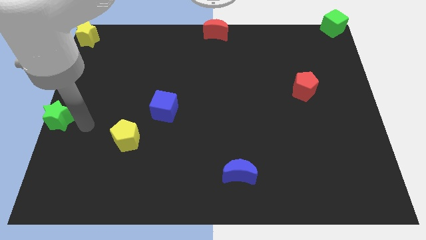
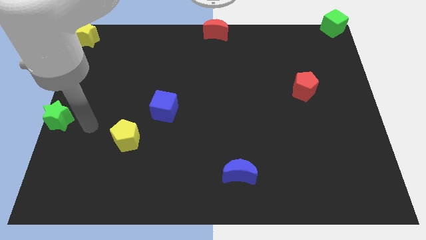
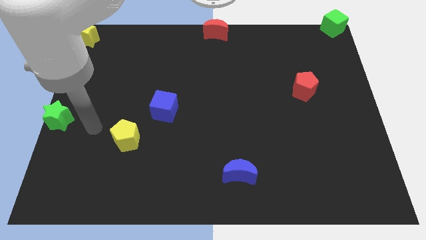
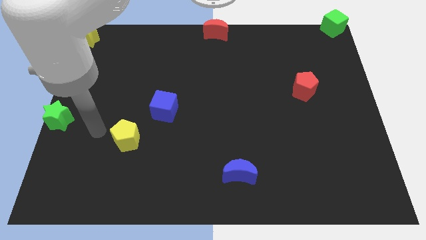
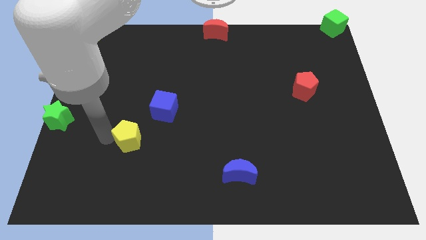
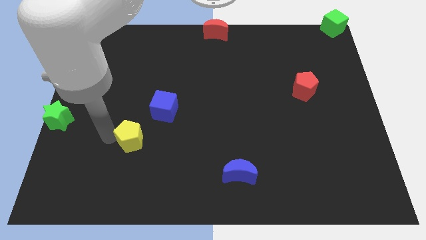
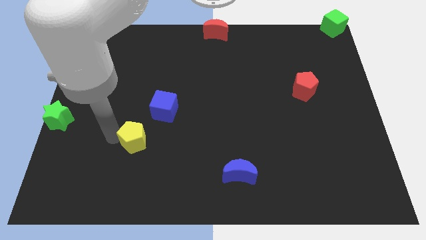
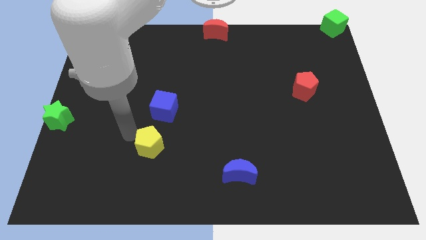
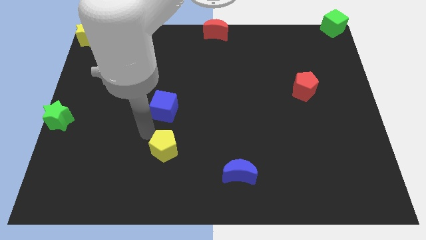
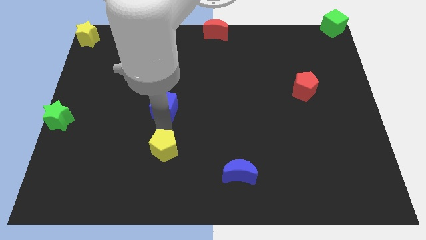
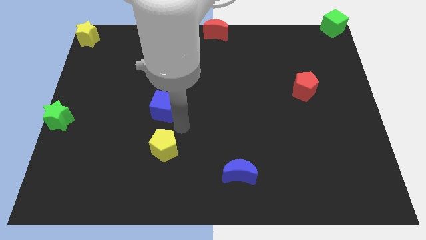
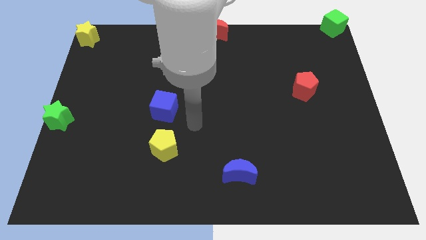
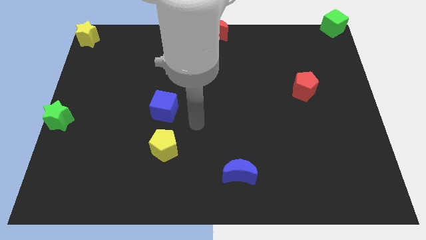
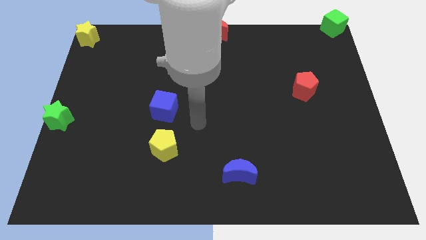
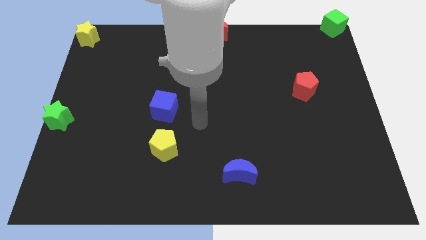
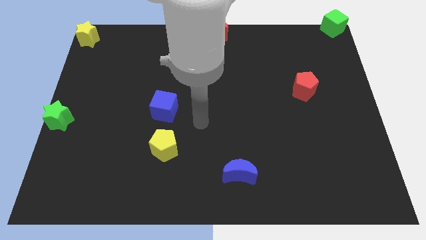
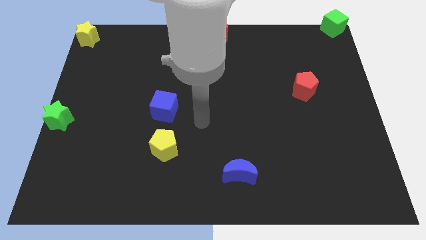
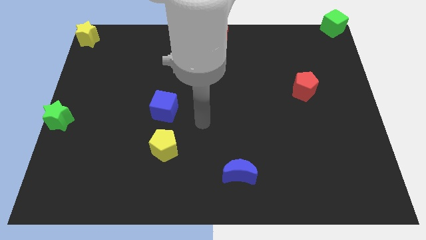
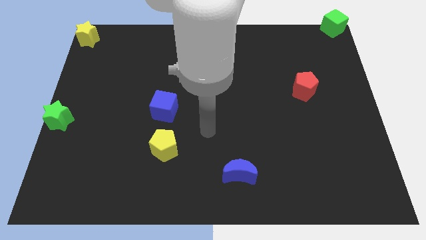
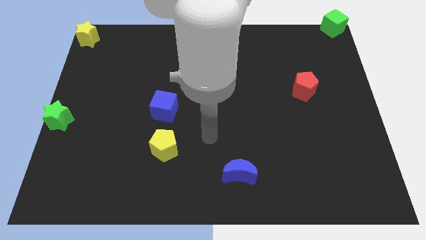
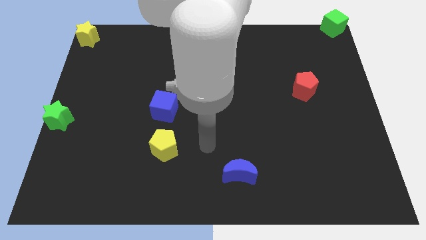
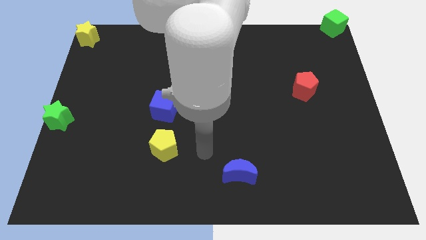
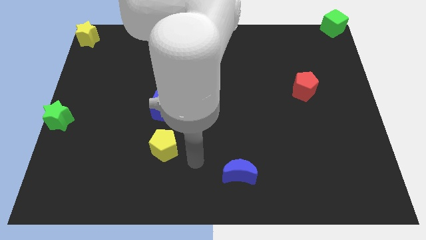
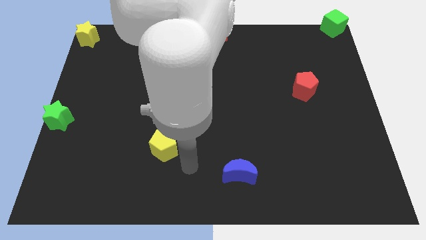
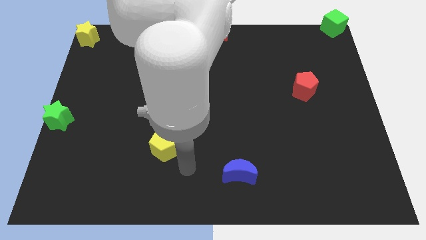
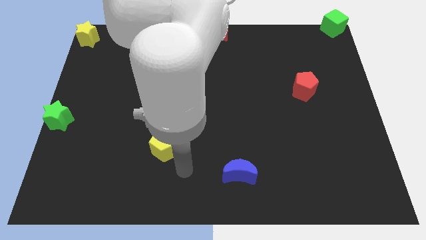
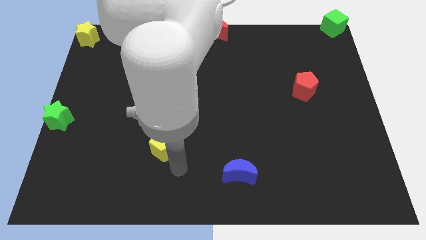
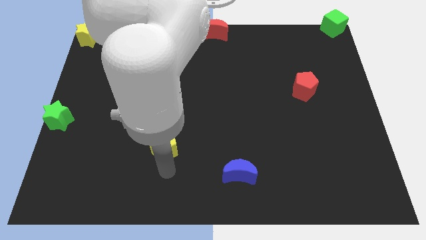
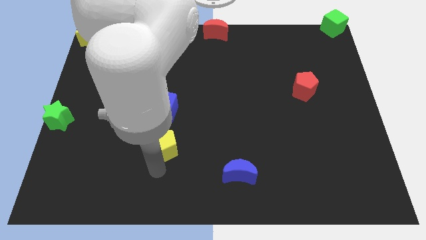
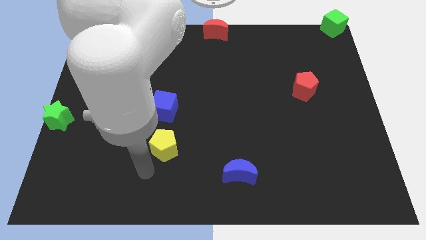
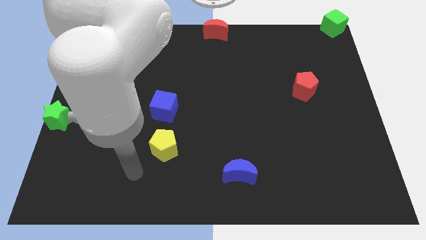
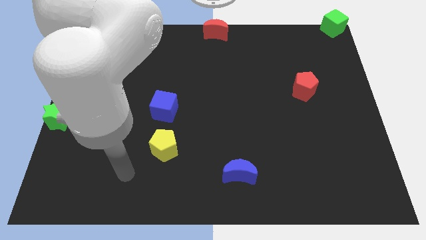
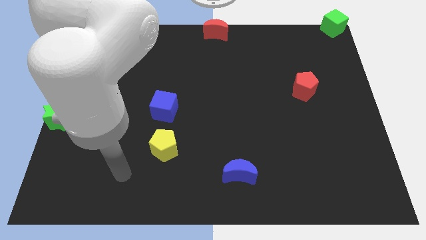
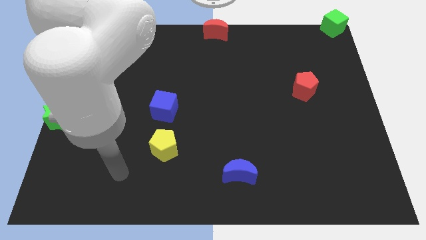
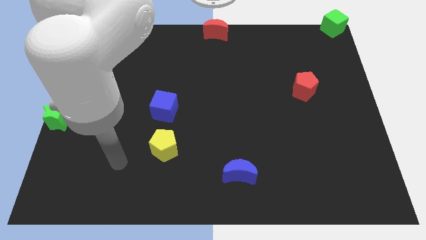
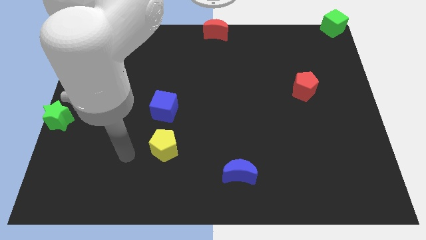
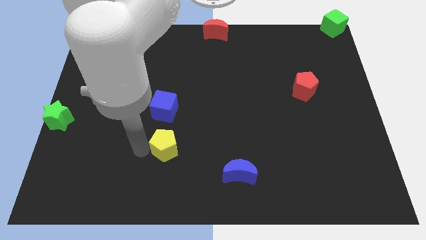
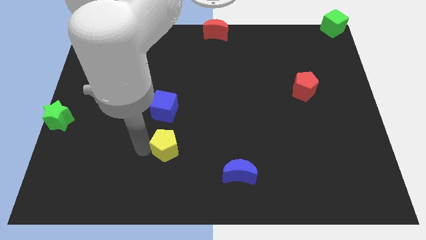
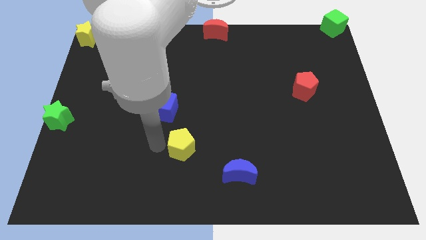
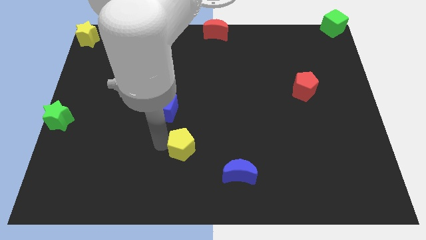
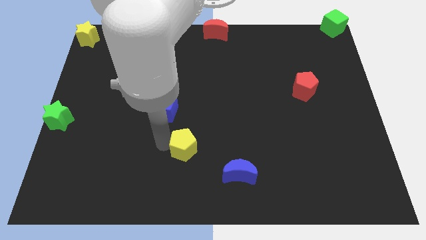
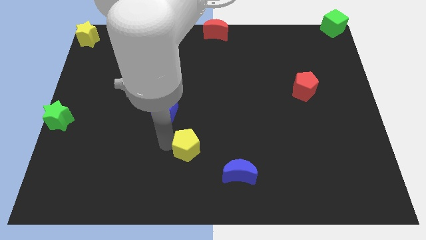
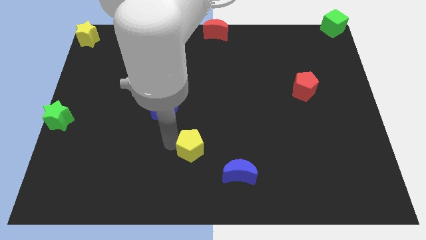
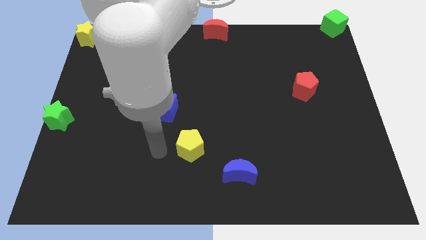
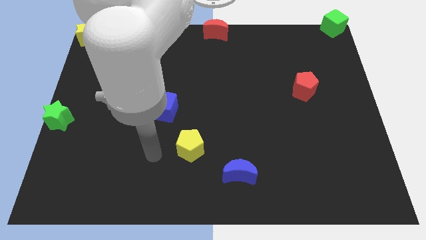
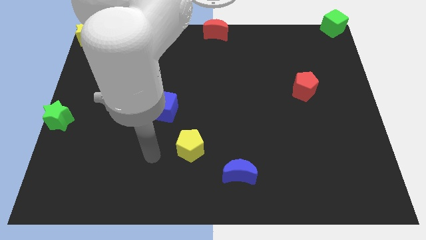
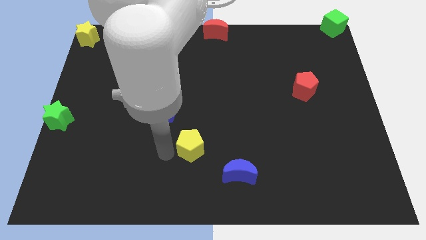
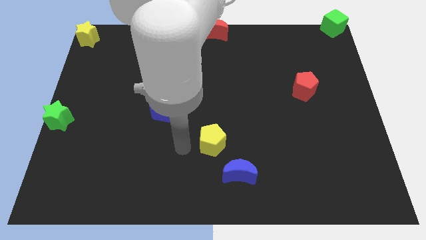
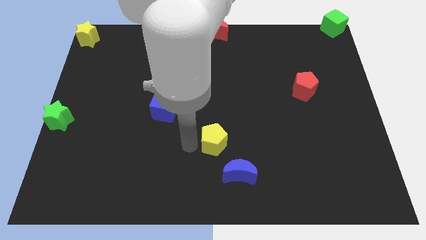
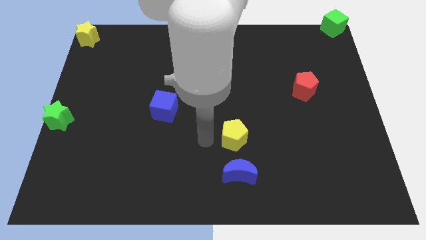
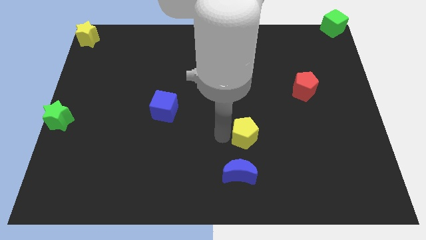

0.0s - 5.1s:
place the yellow pentagon above the blue crescent

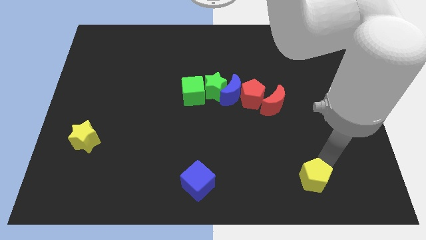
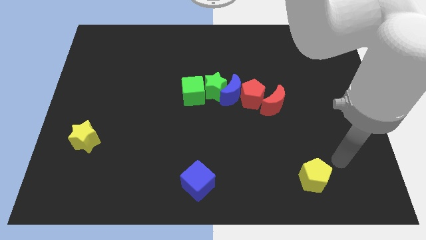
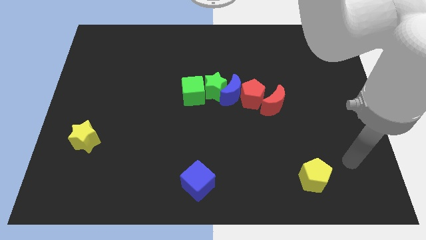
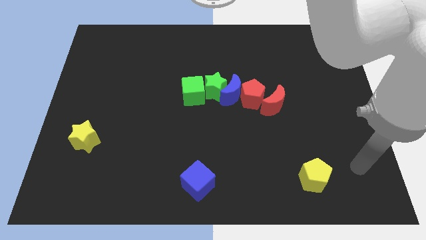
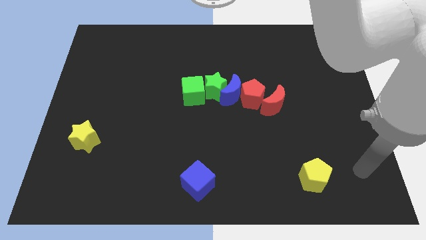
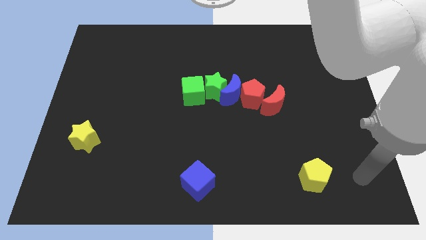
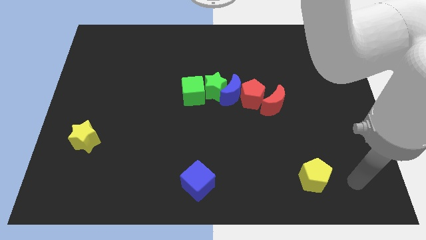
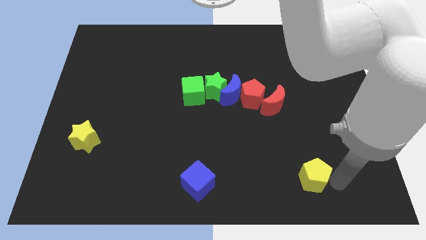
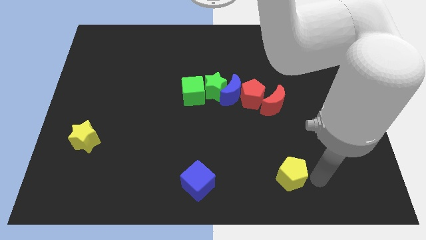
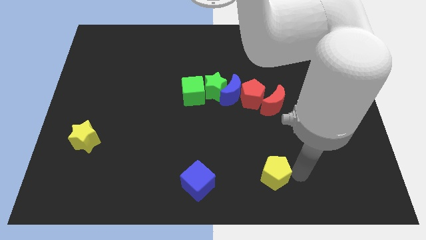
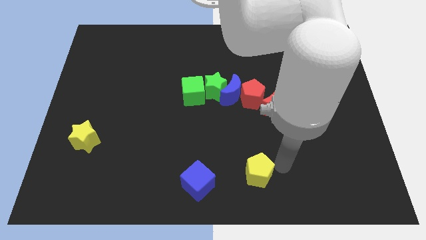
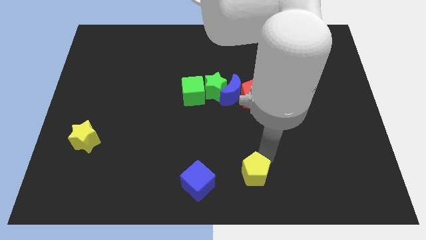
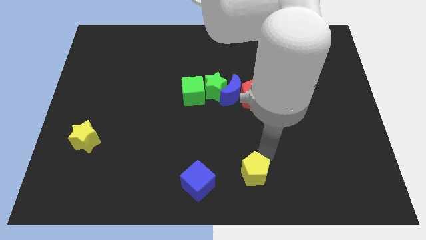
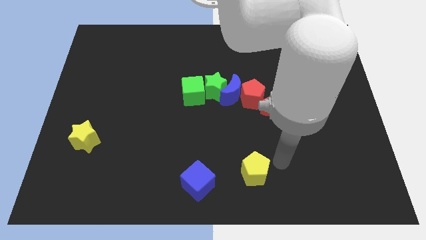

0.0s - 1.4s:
place the yellow pentagon below the red pentagon

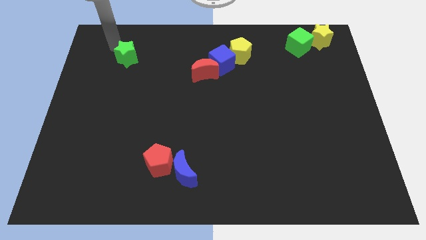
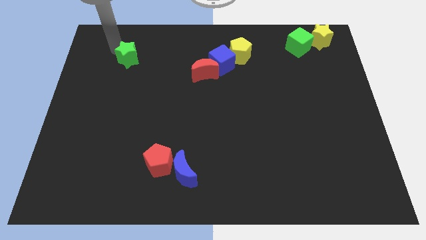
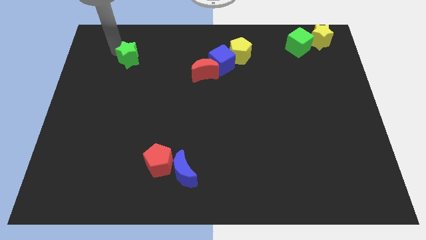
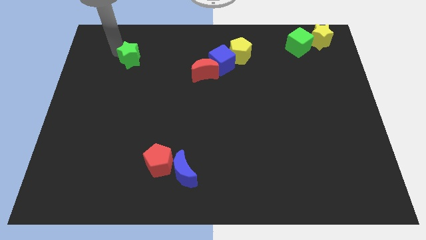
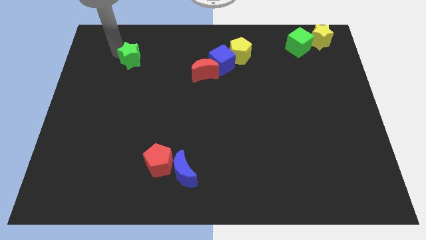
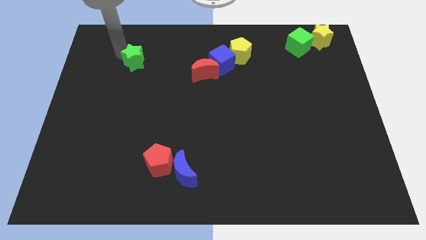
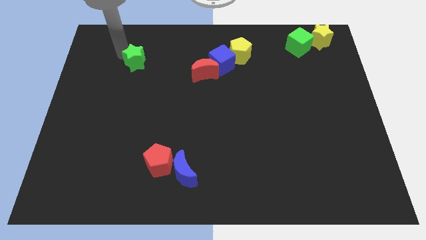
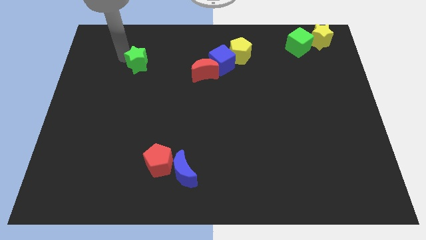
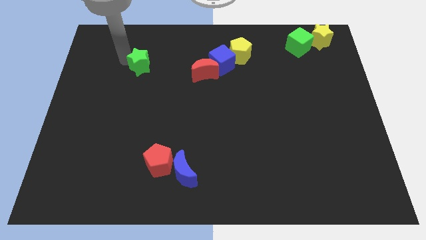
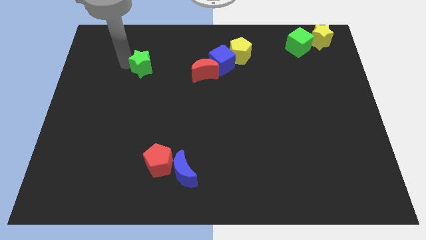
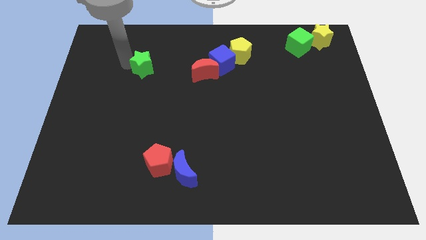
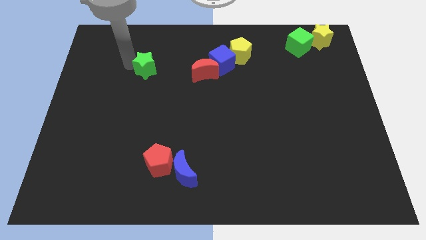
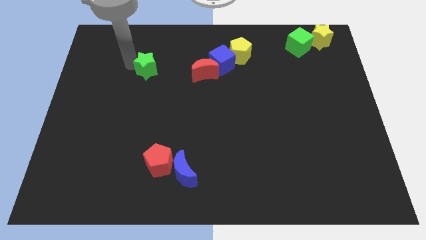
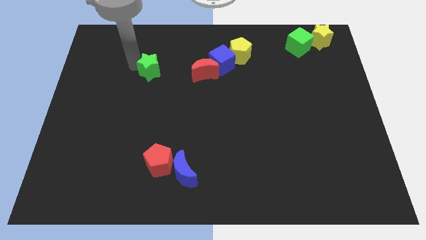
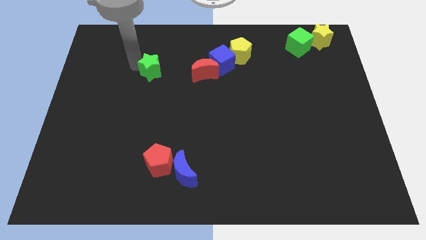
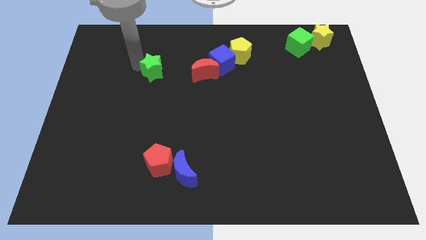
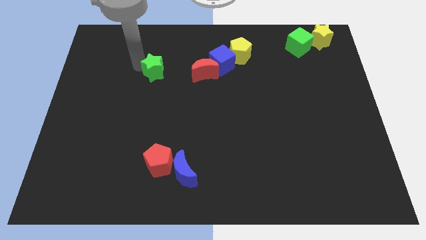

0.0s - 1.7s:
push the green star to the left of red crescent

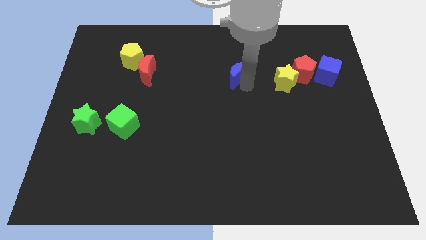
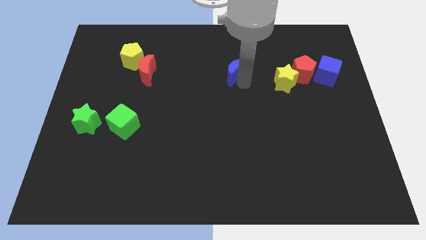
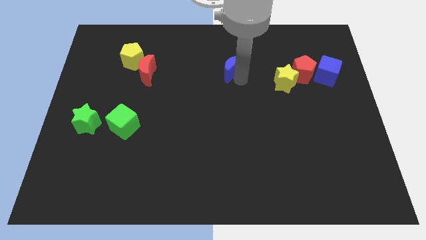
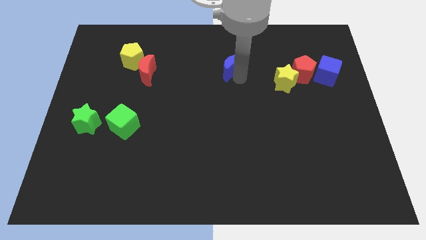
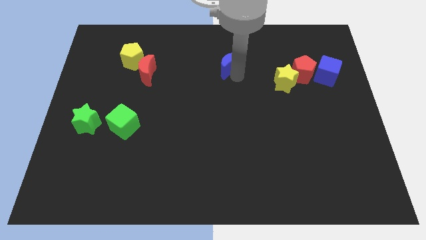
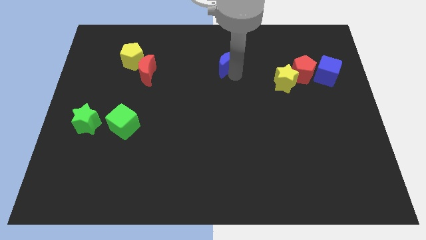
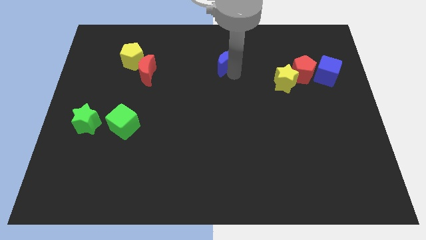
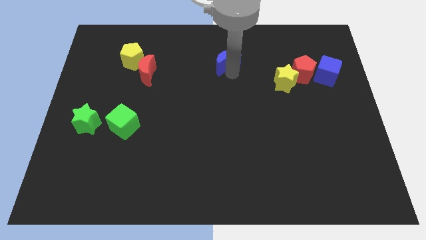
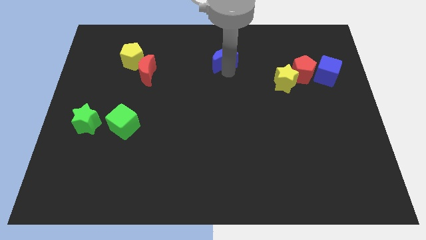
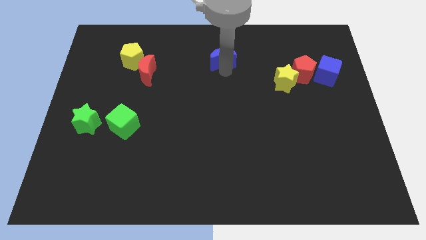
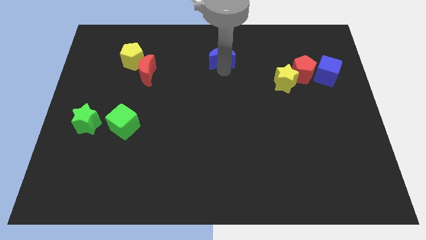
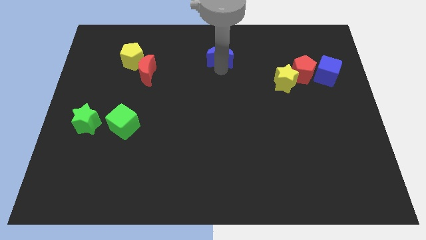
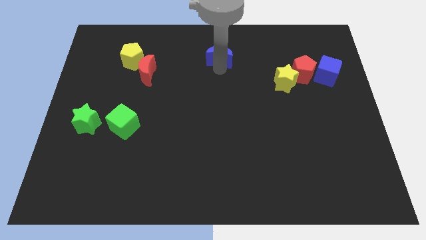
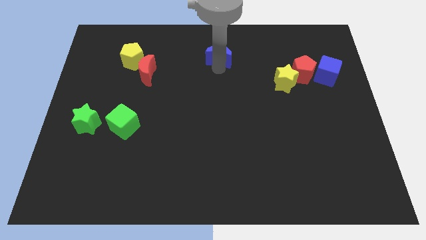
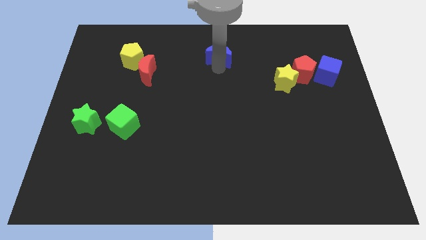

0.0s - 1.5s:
push the blue moon upward
